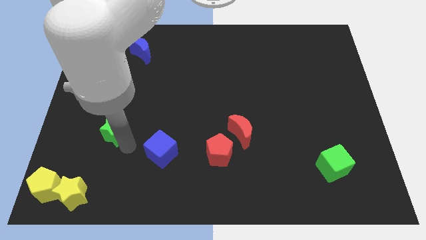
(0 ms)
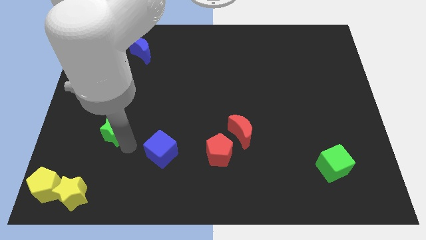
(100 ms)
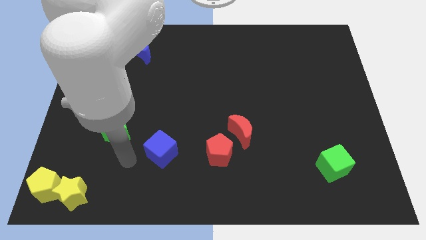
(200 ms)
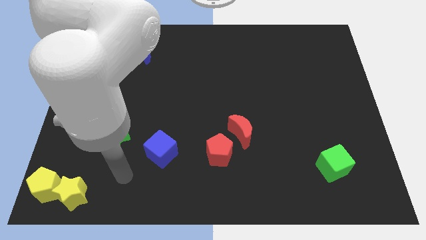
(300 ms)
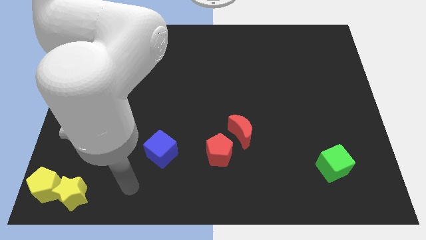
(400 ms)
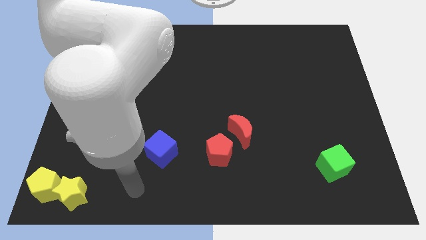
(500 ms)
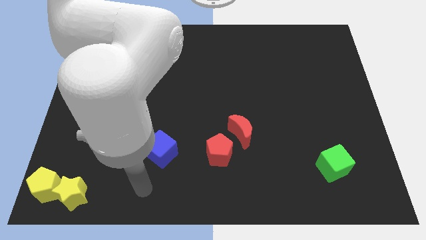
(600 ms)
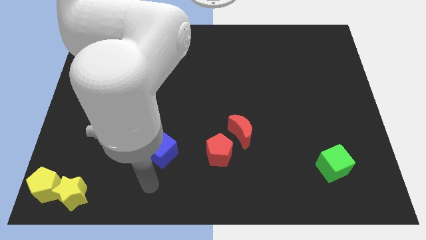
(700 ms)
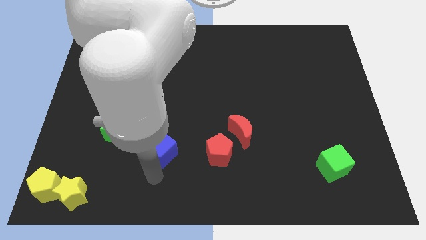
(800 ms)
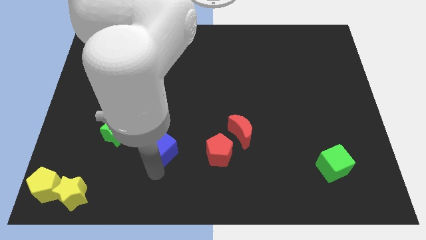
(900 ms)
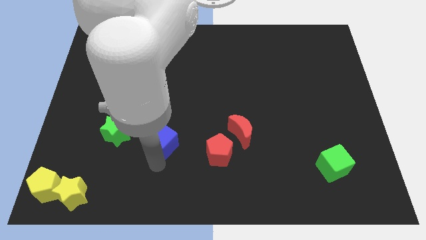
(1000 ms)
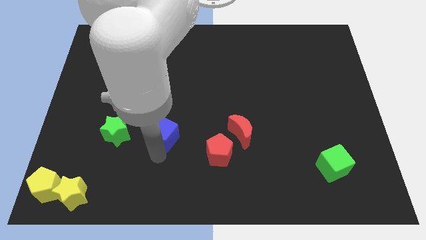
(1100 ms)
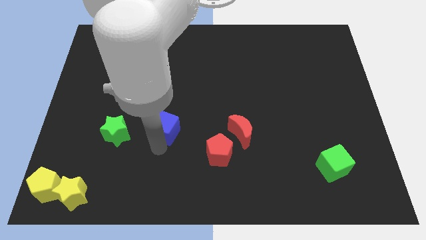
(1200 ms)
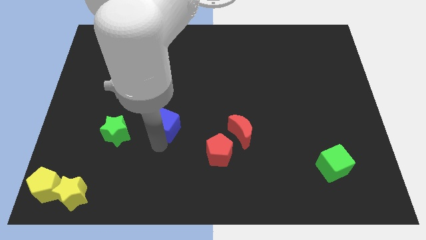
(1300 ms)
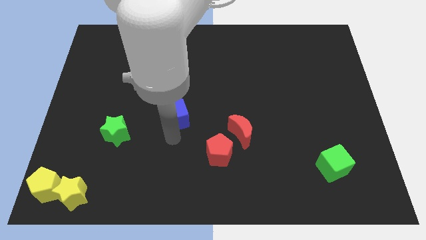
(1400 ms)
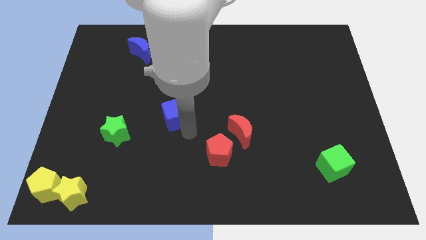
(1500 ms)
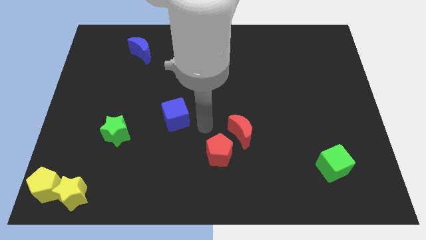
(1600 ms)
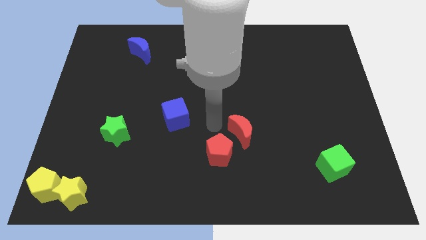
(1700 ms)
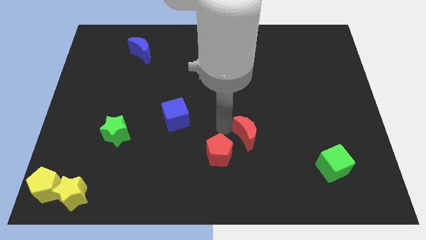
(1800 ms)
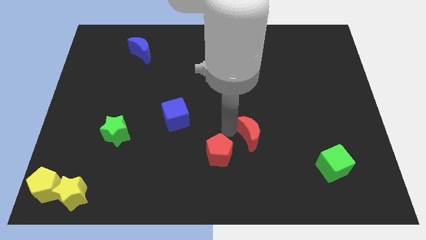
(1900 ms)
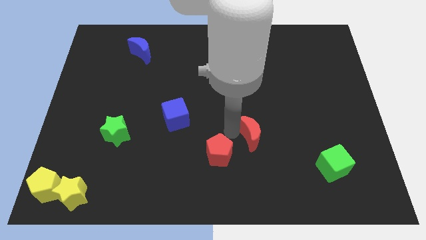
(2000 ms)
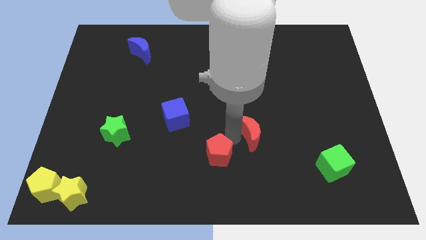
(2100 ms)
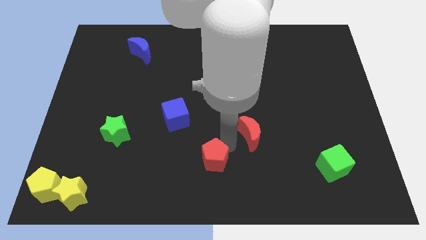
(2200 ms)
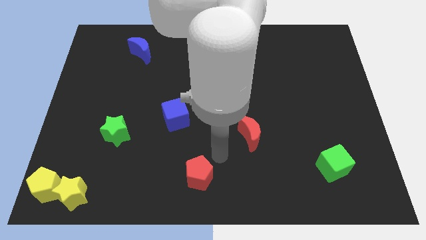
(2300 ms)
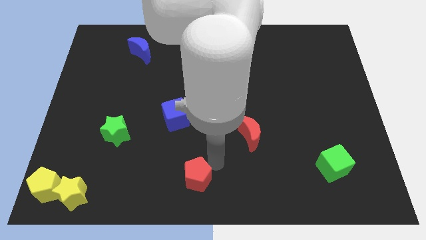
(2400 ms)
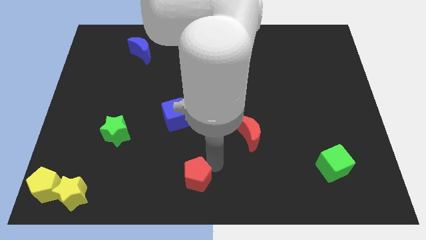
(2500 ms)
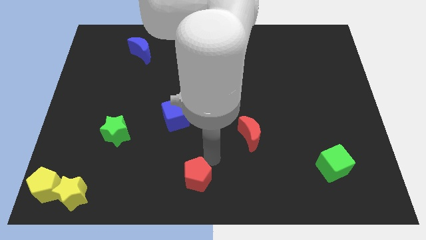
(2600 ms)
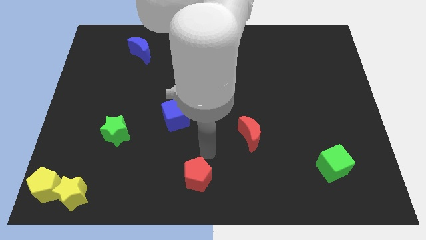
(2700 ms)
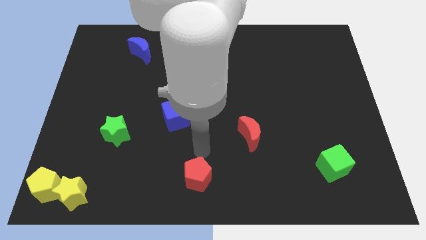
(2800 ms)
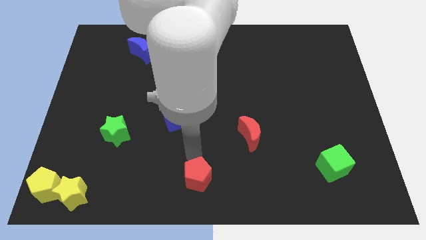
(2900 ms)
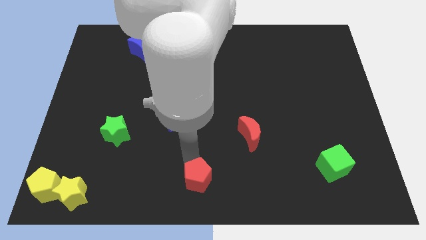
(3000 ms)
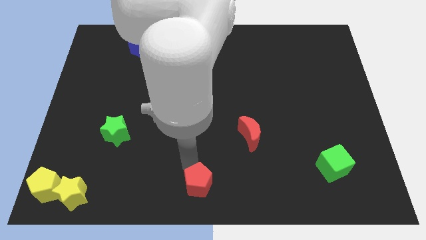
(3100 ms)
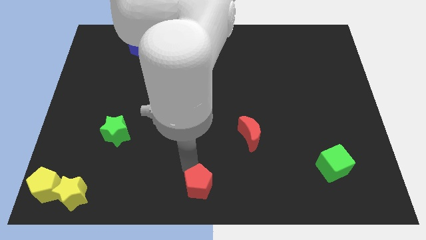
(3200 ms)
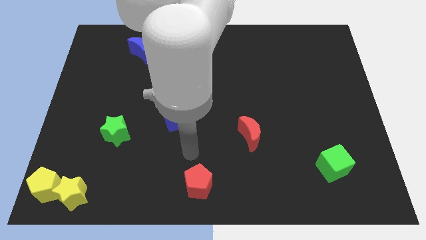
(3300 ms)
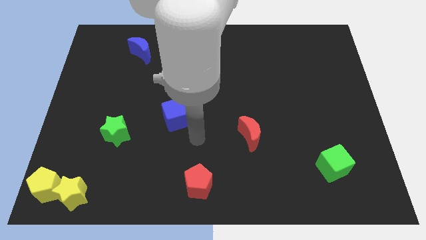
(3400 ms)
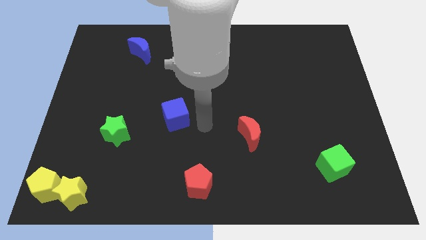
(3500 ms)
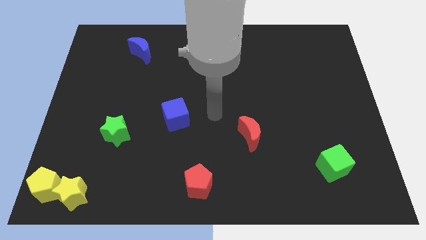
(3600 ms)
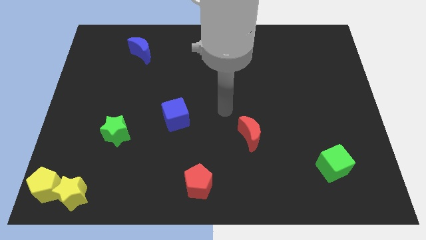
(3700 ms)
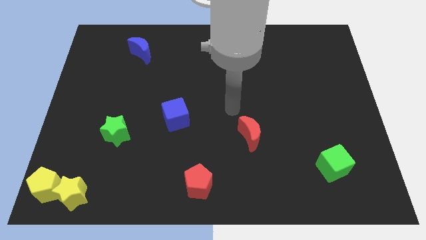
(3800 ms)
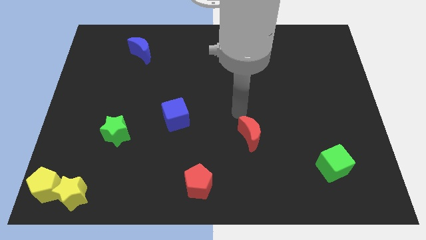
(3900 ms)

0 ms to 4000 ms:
place red pentagon to the bottom right of the blue cube

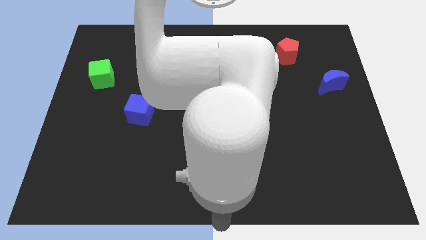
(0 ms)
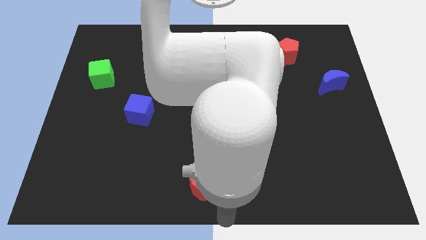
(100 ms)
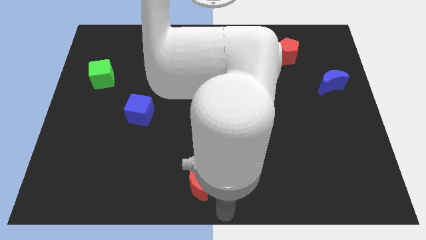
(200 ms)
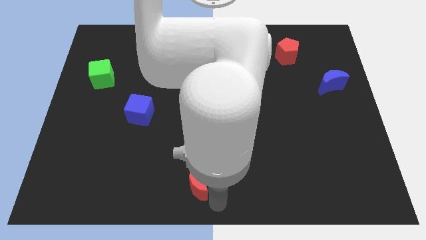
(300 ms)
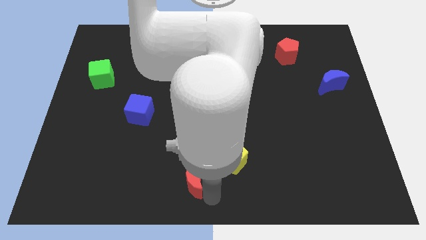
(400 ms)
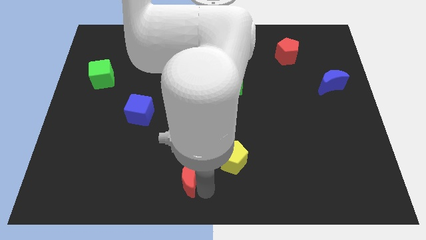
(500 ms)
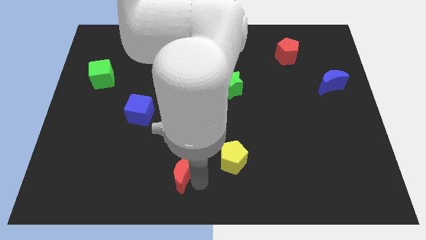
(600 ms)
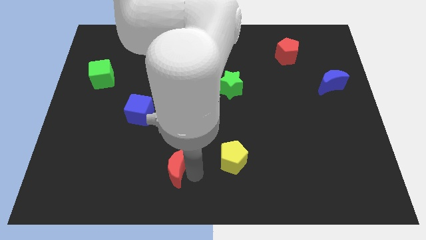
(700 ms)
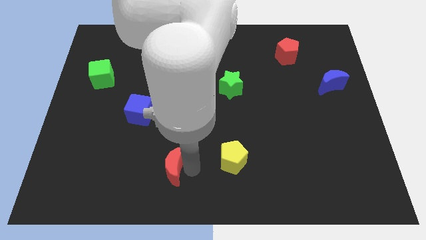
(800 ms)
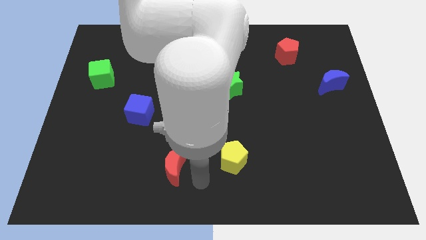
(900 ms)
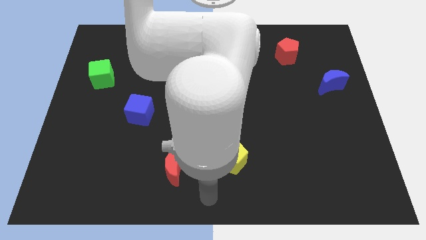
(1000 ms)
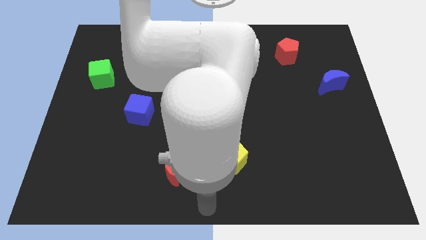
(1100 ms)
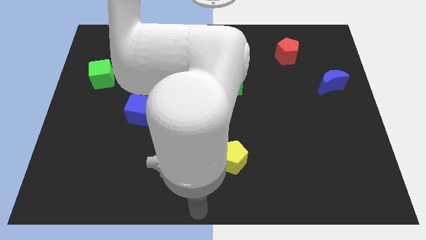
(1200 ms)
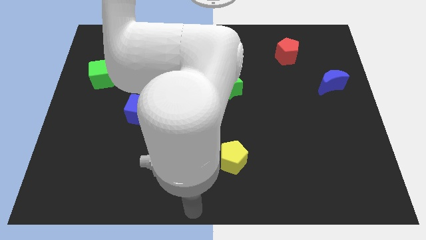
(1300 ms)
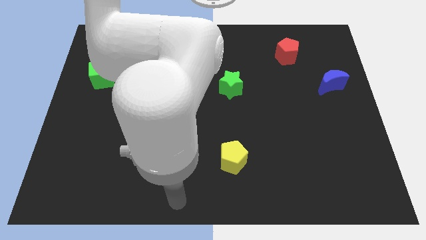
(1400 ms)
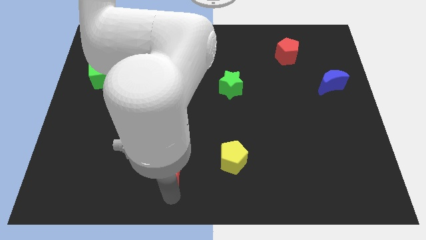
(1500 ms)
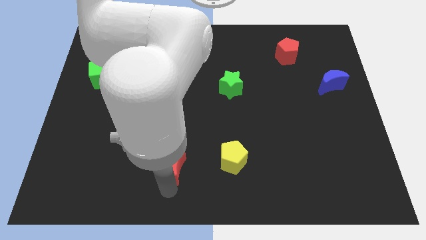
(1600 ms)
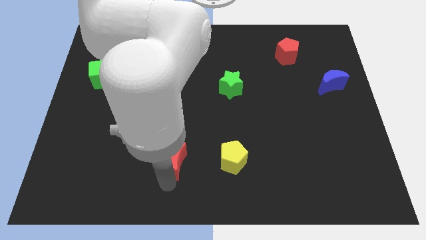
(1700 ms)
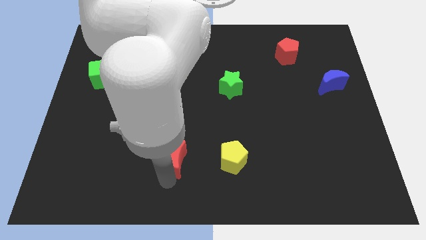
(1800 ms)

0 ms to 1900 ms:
place the red crescent at left side of the yellow pentagon

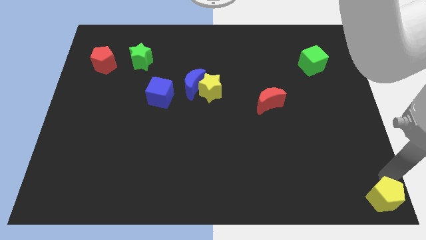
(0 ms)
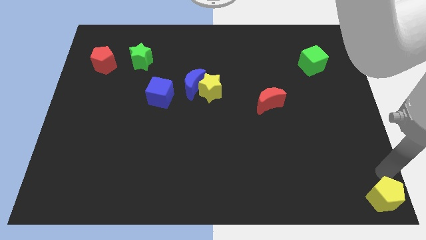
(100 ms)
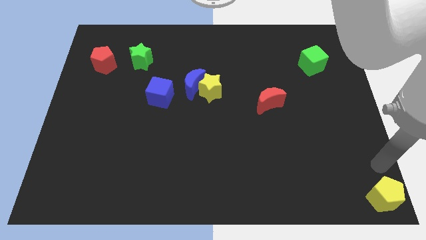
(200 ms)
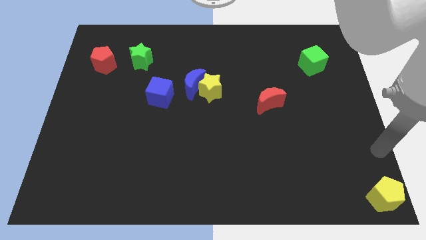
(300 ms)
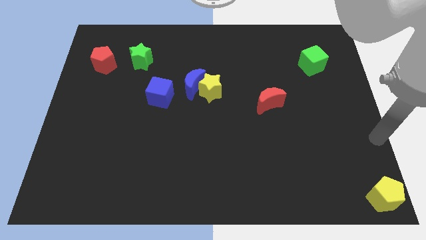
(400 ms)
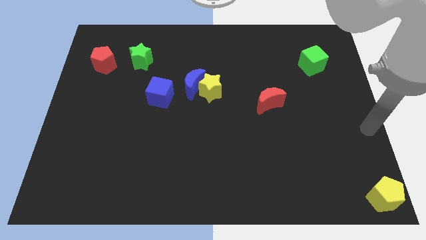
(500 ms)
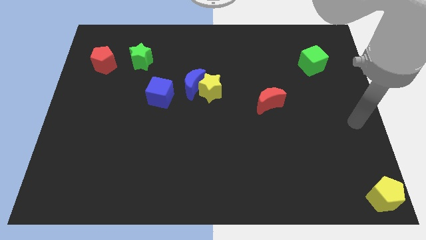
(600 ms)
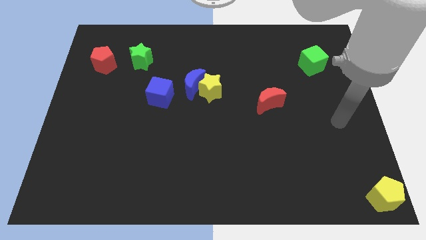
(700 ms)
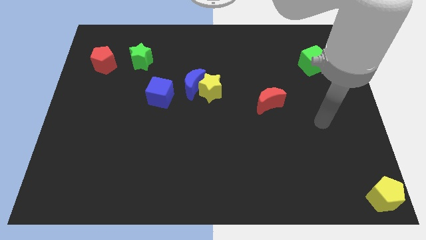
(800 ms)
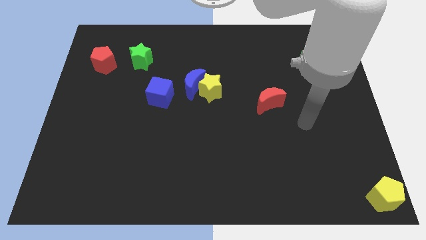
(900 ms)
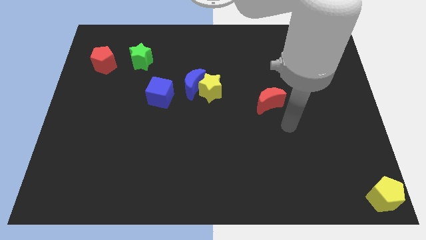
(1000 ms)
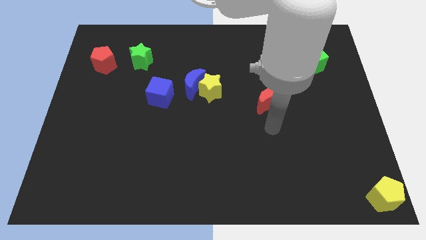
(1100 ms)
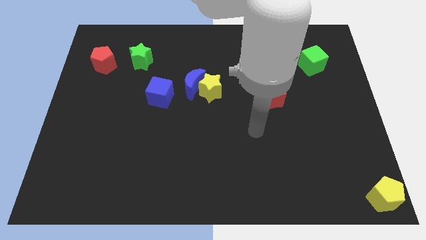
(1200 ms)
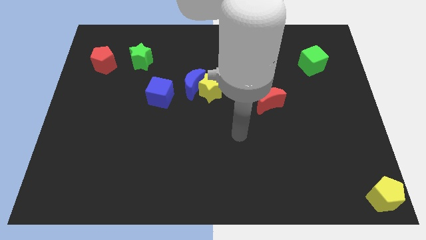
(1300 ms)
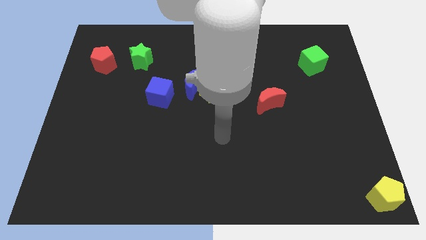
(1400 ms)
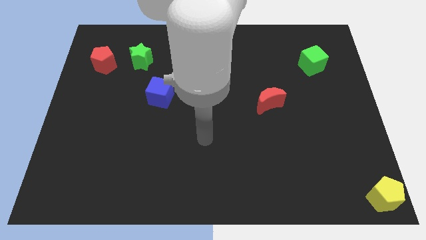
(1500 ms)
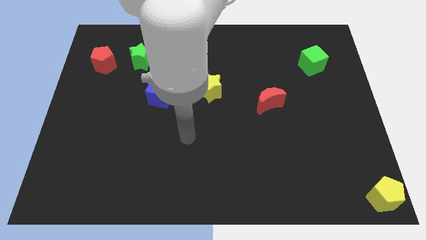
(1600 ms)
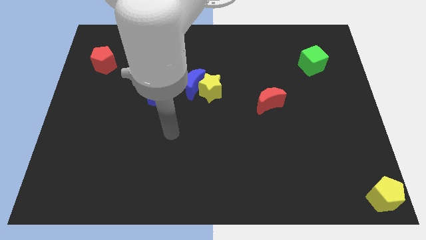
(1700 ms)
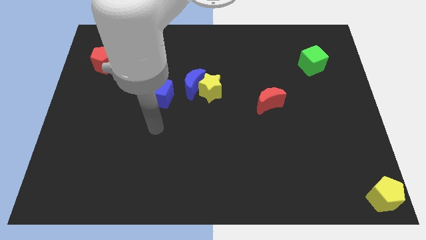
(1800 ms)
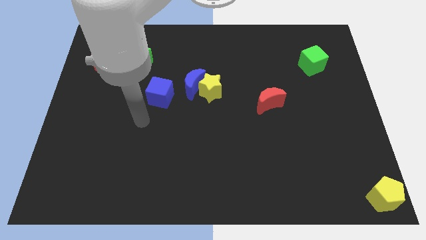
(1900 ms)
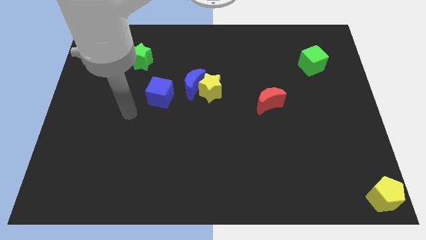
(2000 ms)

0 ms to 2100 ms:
point your arm to the bottom left of the blue cube

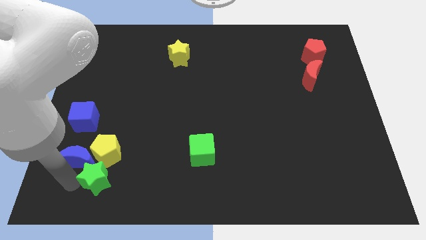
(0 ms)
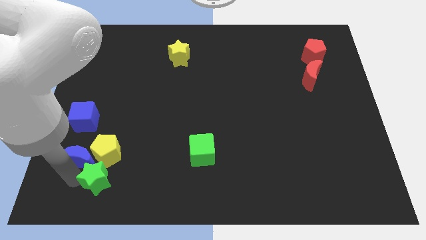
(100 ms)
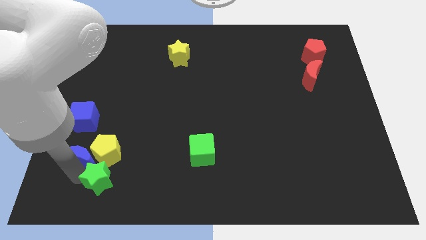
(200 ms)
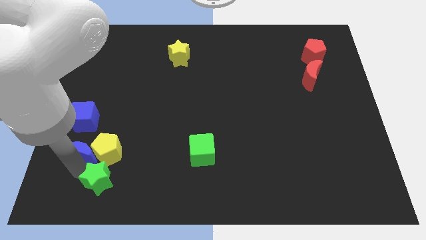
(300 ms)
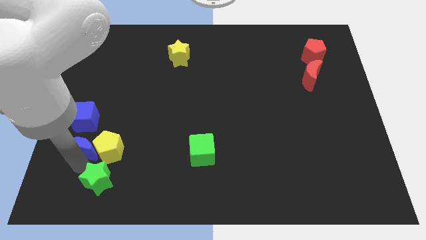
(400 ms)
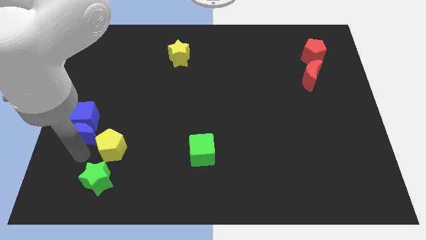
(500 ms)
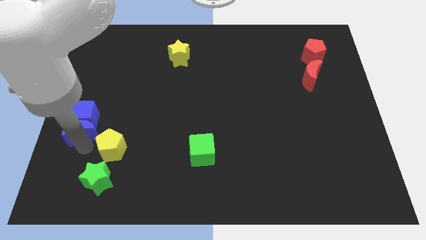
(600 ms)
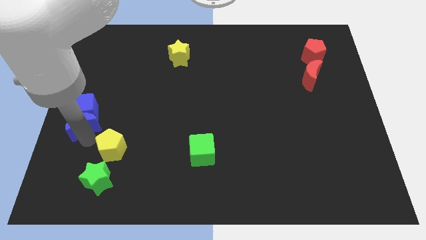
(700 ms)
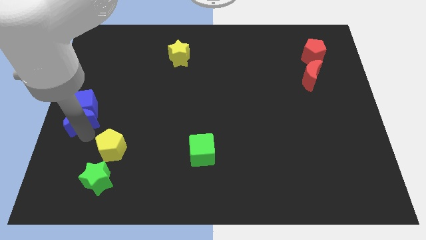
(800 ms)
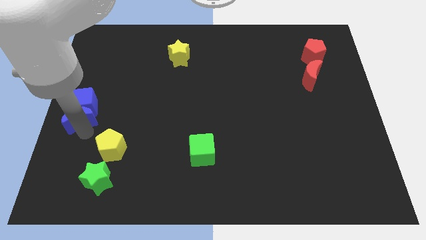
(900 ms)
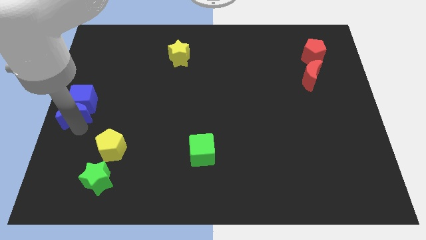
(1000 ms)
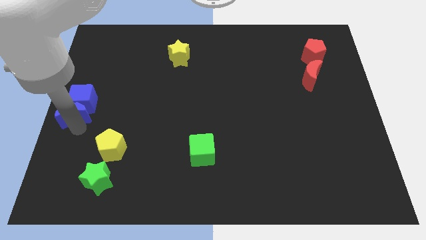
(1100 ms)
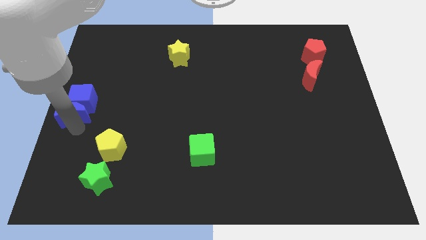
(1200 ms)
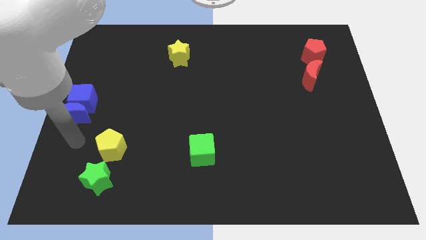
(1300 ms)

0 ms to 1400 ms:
push blue crescent in to blue cube
